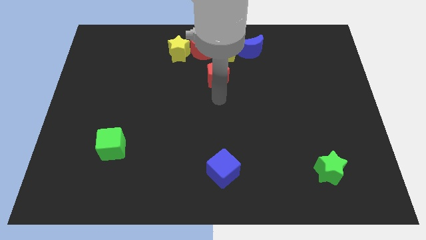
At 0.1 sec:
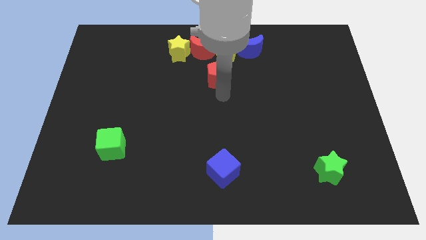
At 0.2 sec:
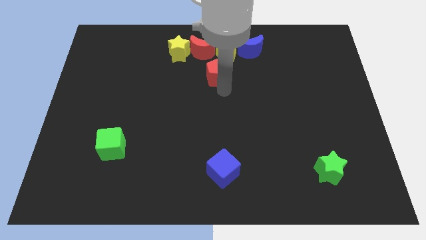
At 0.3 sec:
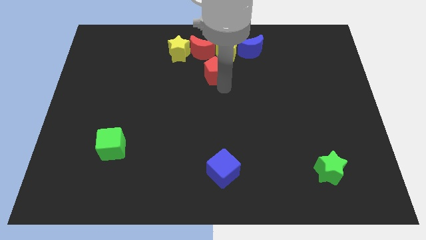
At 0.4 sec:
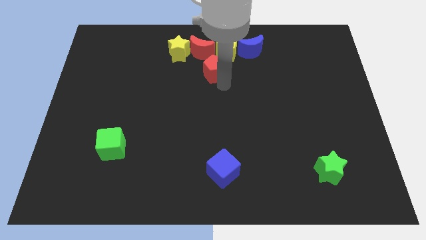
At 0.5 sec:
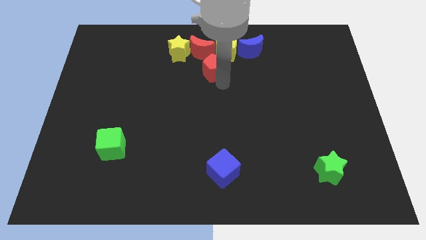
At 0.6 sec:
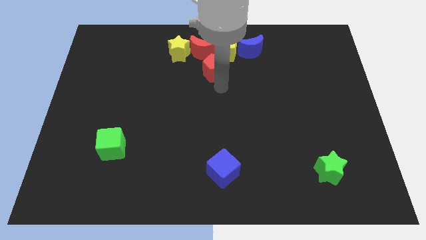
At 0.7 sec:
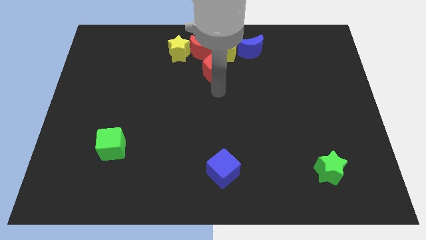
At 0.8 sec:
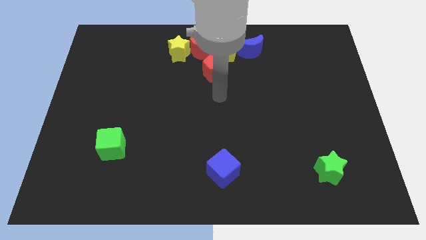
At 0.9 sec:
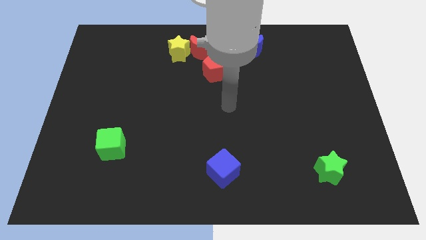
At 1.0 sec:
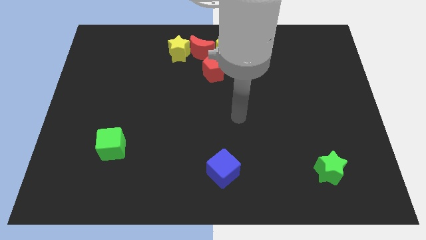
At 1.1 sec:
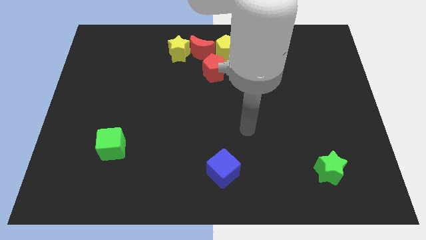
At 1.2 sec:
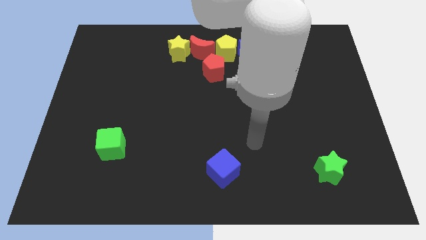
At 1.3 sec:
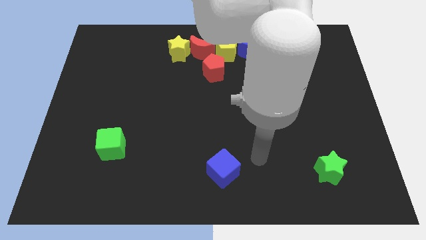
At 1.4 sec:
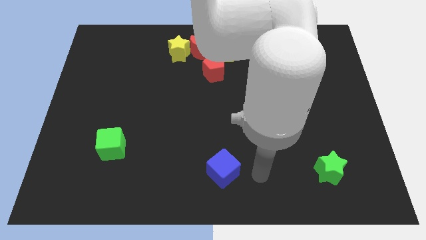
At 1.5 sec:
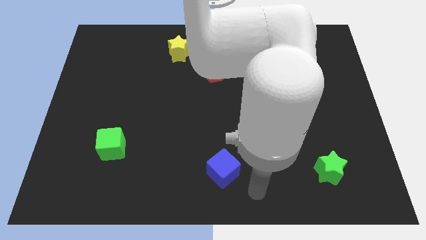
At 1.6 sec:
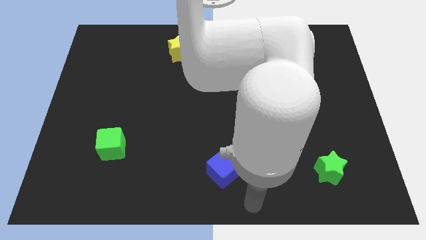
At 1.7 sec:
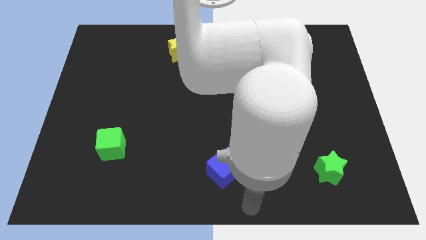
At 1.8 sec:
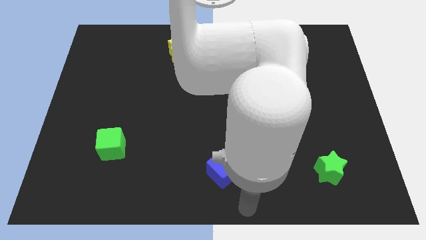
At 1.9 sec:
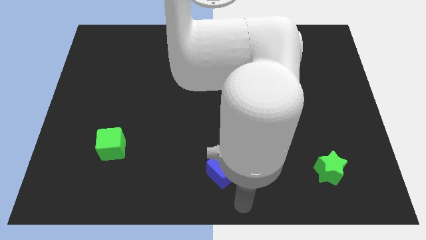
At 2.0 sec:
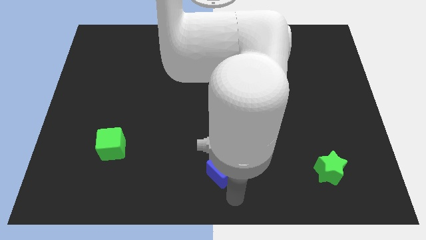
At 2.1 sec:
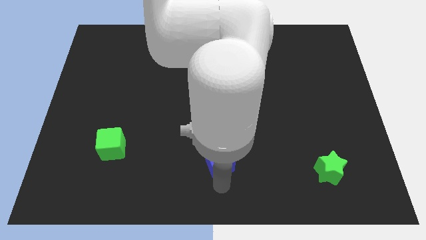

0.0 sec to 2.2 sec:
touch the bottom of blue cube

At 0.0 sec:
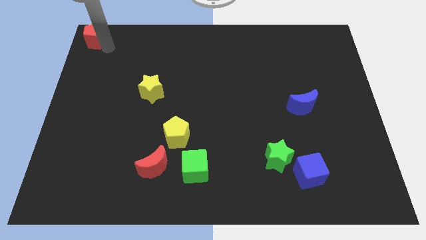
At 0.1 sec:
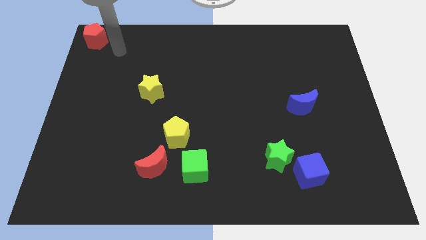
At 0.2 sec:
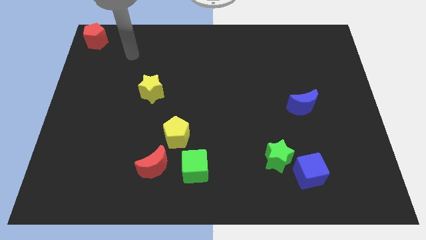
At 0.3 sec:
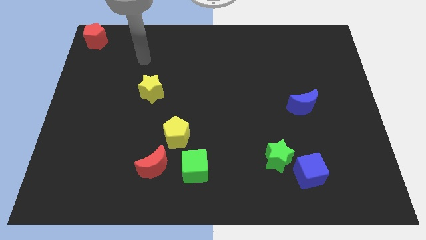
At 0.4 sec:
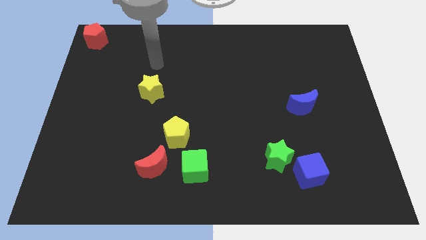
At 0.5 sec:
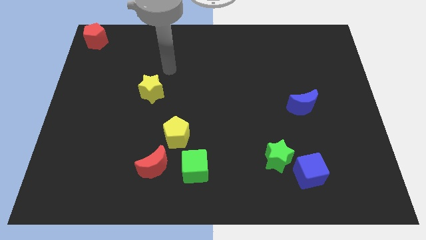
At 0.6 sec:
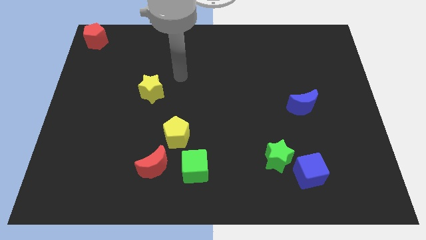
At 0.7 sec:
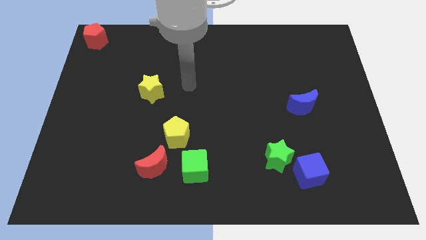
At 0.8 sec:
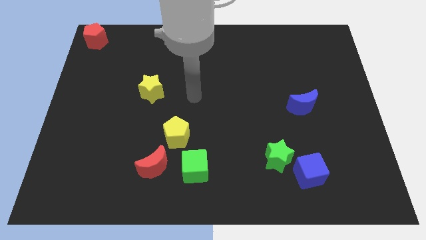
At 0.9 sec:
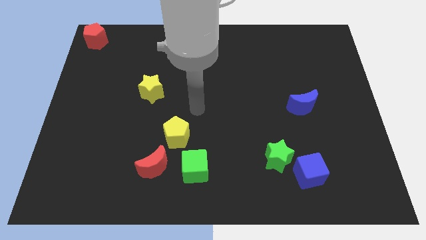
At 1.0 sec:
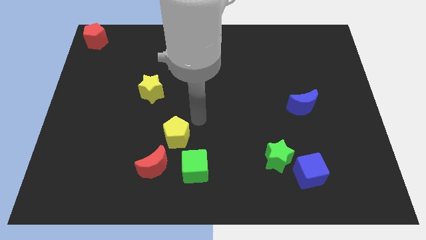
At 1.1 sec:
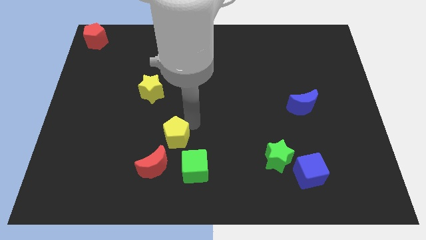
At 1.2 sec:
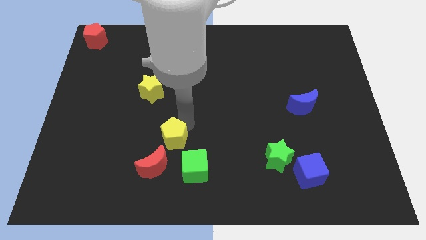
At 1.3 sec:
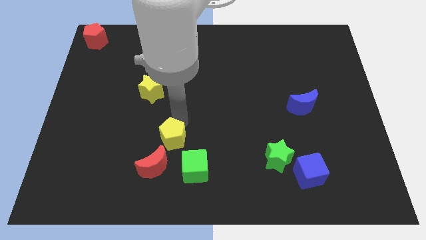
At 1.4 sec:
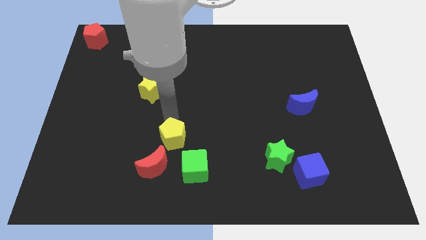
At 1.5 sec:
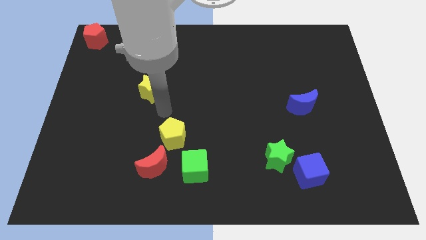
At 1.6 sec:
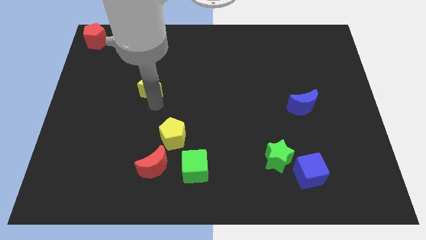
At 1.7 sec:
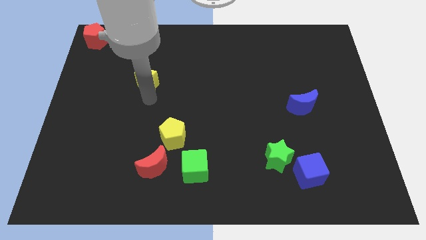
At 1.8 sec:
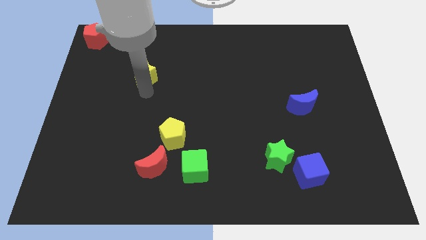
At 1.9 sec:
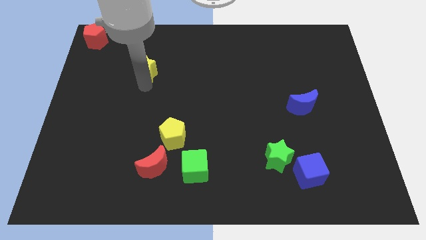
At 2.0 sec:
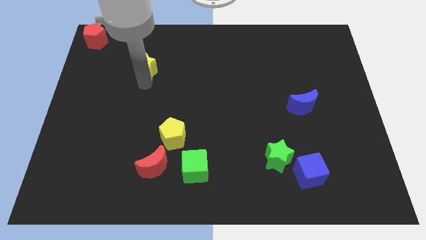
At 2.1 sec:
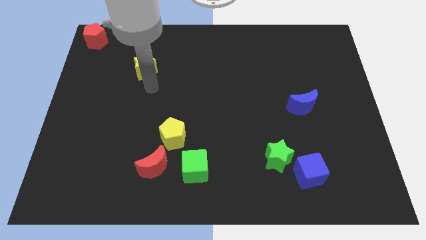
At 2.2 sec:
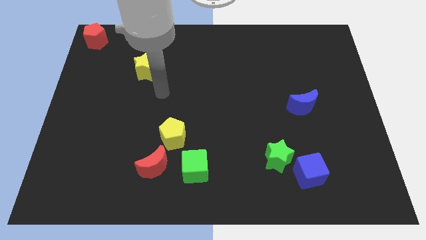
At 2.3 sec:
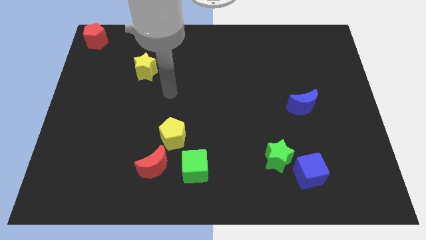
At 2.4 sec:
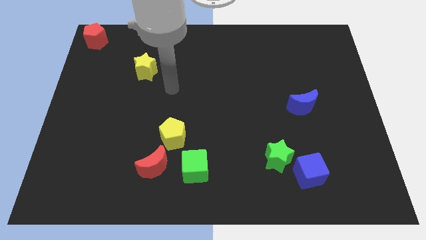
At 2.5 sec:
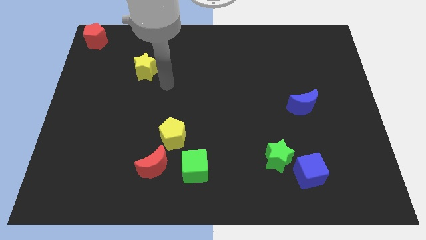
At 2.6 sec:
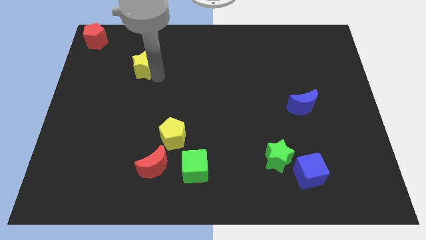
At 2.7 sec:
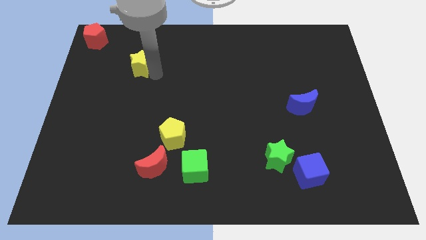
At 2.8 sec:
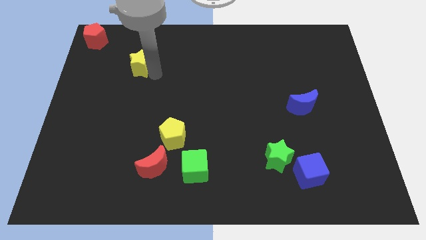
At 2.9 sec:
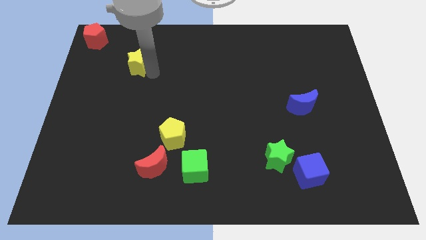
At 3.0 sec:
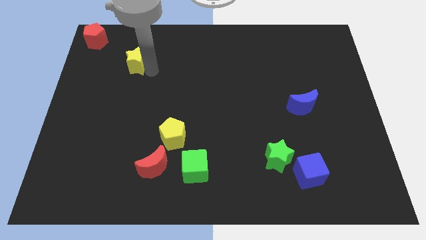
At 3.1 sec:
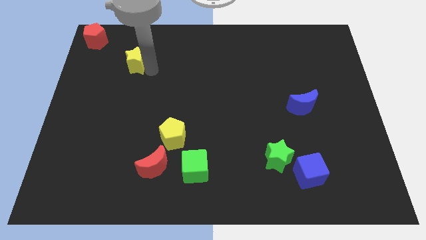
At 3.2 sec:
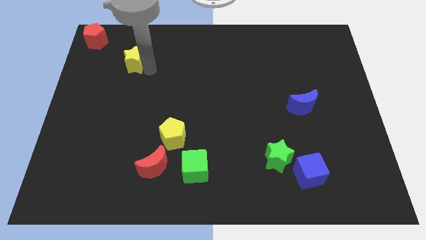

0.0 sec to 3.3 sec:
move yellow star towards diagonal bottom right of the red pentagon

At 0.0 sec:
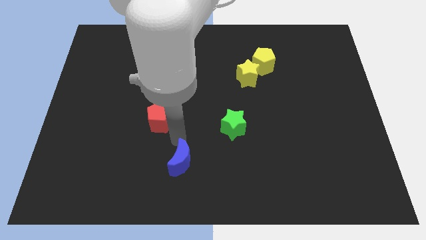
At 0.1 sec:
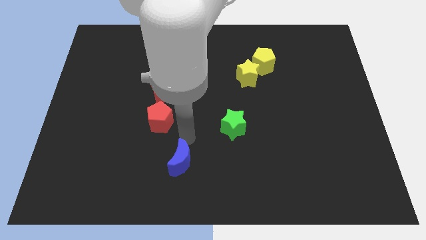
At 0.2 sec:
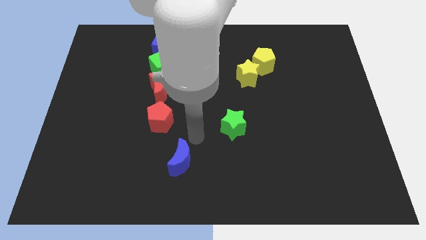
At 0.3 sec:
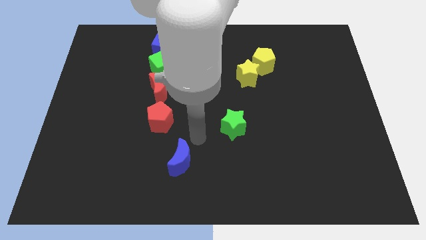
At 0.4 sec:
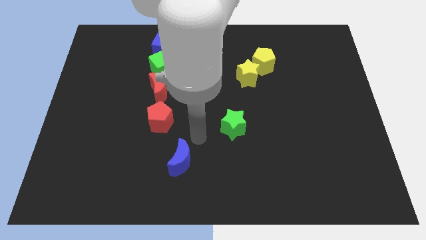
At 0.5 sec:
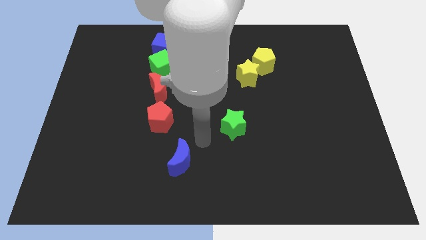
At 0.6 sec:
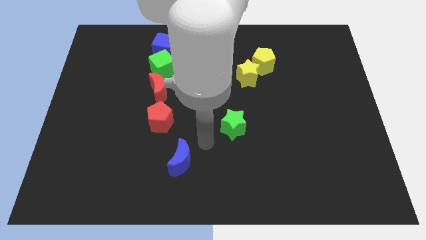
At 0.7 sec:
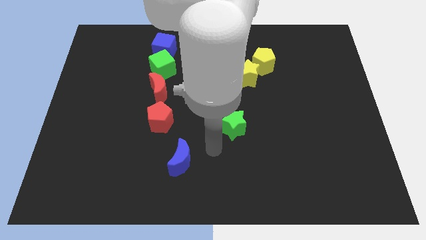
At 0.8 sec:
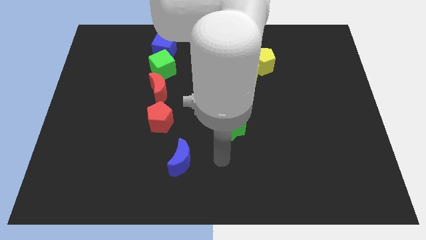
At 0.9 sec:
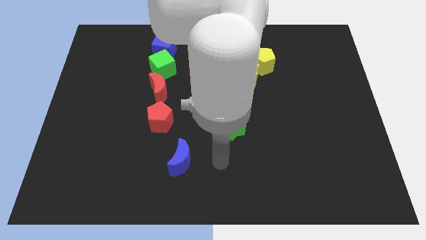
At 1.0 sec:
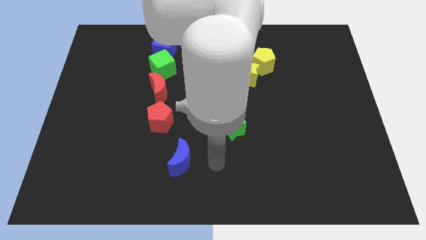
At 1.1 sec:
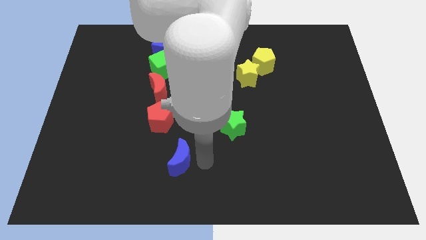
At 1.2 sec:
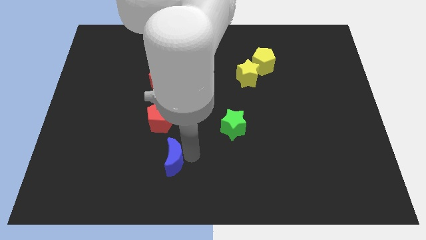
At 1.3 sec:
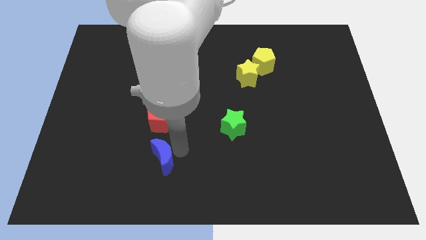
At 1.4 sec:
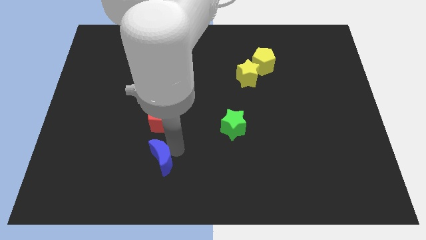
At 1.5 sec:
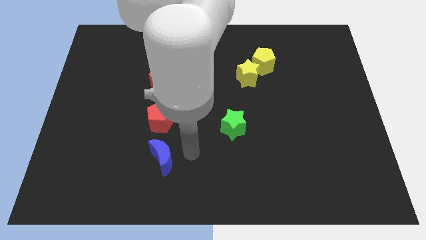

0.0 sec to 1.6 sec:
push the blue crescent to the bottom of the red pentagon

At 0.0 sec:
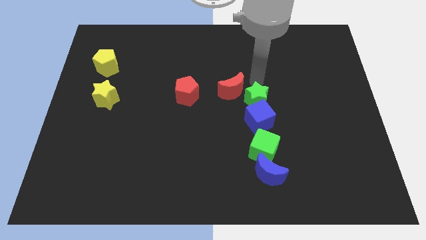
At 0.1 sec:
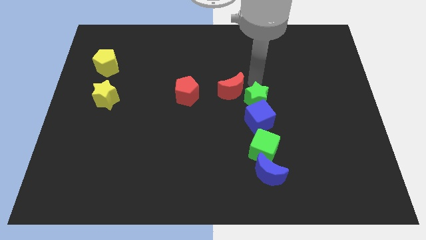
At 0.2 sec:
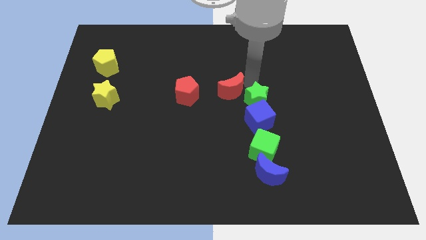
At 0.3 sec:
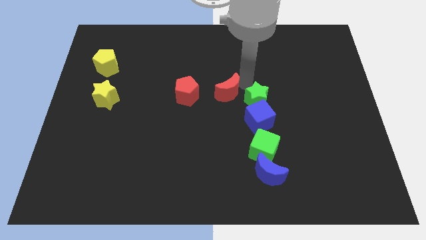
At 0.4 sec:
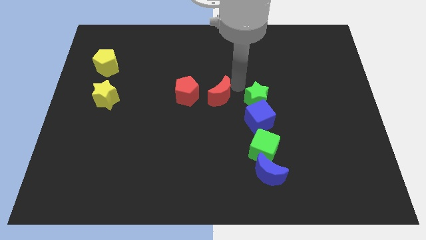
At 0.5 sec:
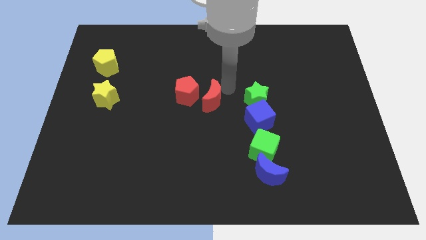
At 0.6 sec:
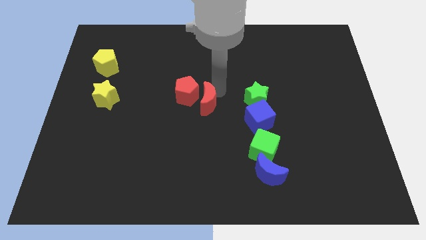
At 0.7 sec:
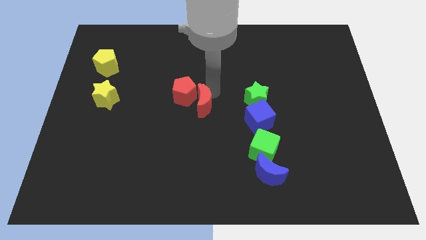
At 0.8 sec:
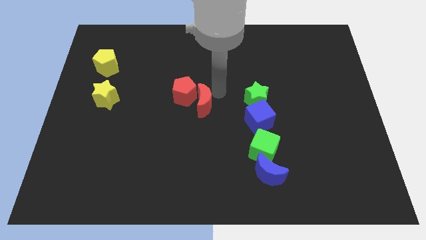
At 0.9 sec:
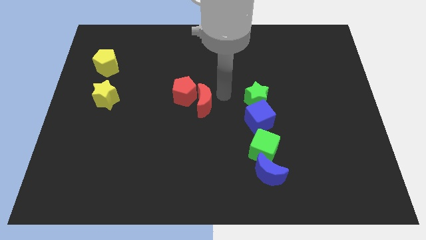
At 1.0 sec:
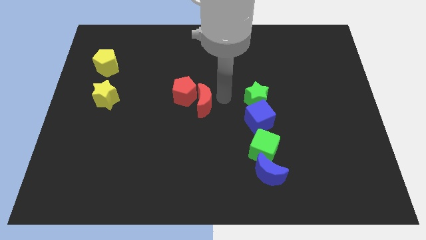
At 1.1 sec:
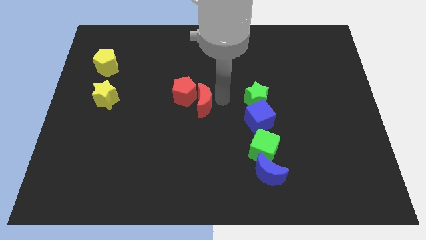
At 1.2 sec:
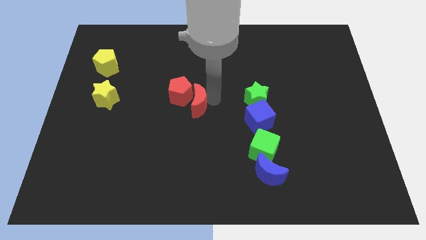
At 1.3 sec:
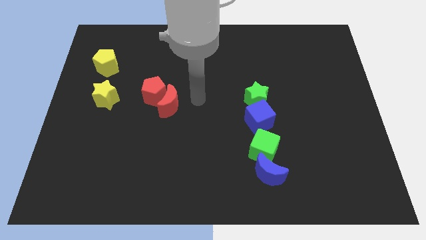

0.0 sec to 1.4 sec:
push the red moon into the red pentagon

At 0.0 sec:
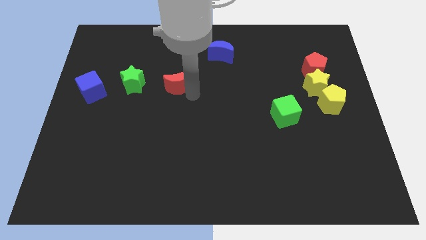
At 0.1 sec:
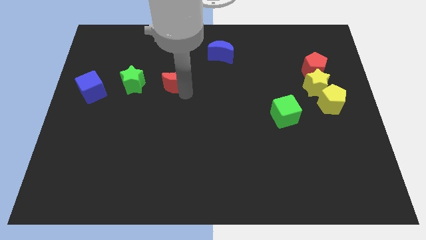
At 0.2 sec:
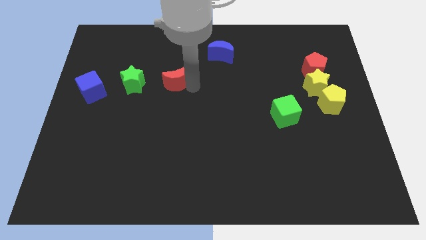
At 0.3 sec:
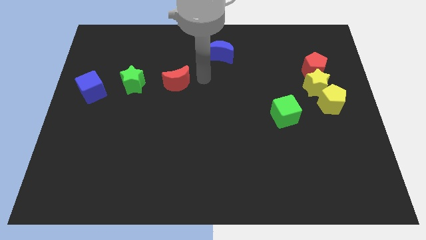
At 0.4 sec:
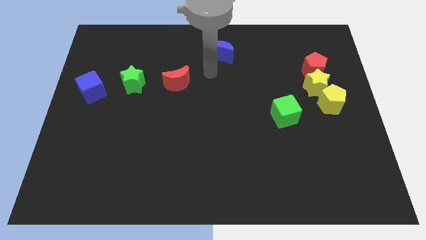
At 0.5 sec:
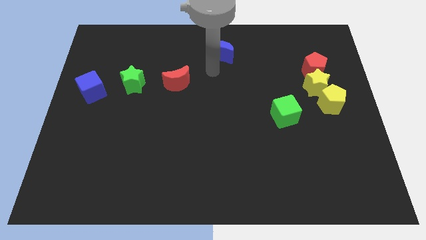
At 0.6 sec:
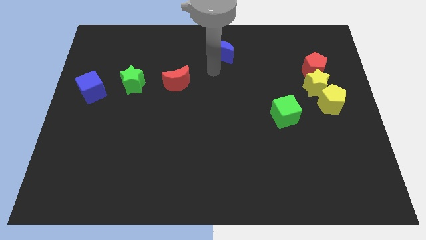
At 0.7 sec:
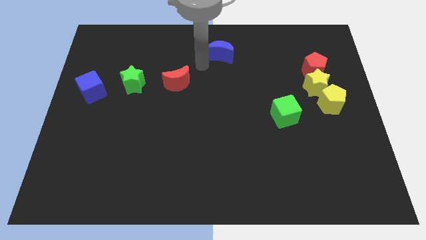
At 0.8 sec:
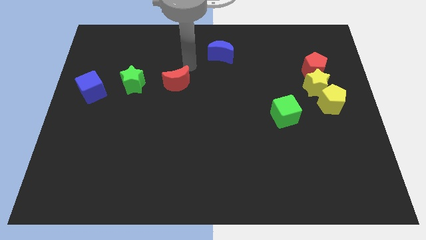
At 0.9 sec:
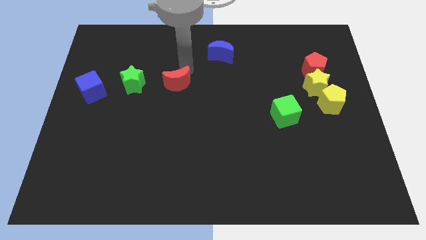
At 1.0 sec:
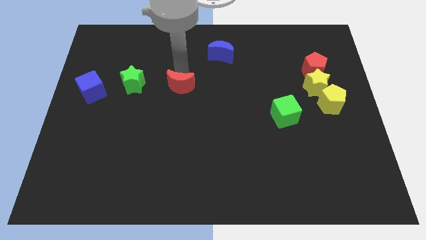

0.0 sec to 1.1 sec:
place your arm on top of the red crescent
